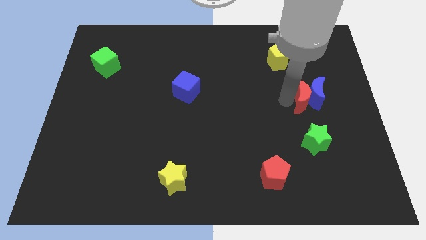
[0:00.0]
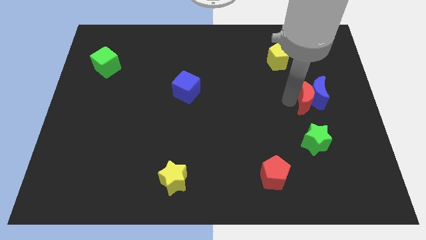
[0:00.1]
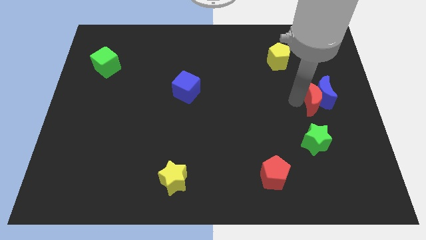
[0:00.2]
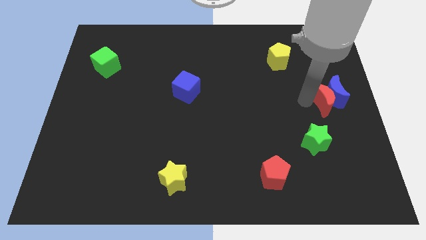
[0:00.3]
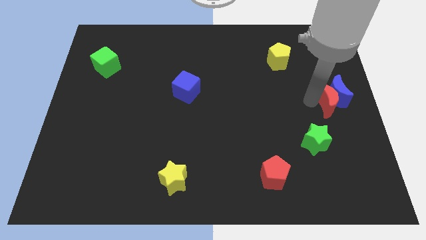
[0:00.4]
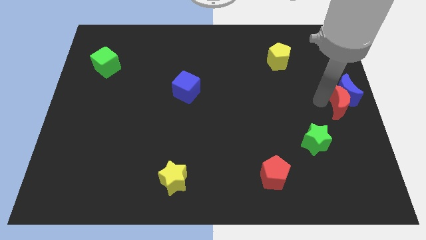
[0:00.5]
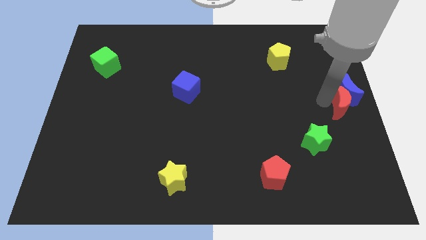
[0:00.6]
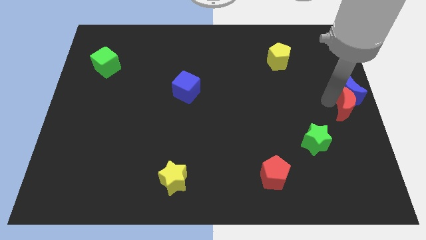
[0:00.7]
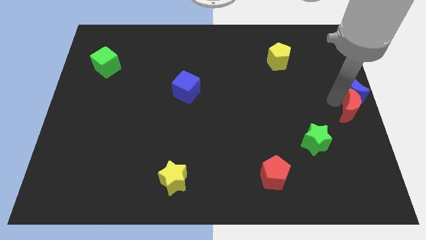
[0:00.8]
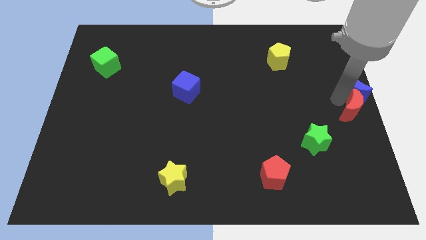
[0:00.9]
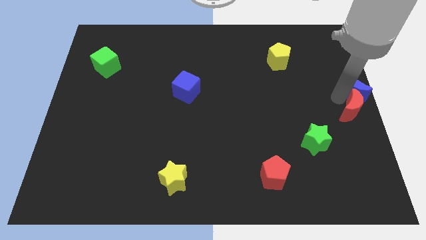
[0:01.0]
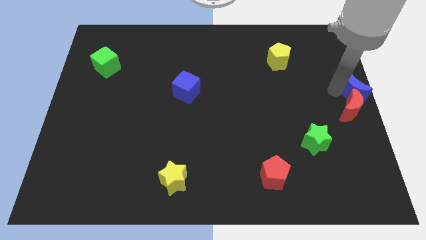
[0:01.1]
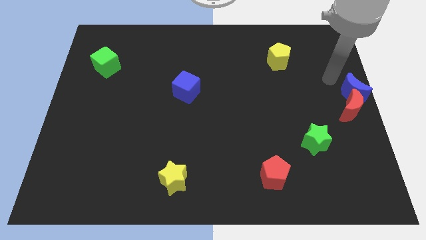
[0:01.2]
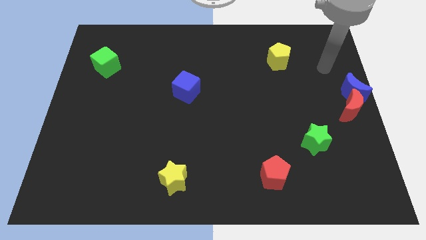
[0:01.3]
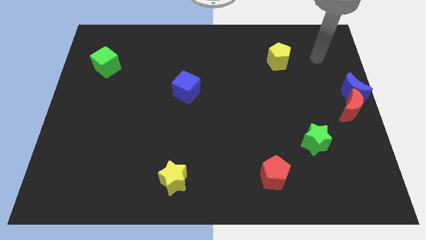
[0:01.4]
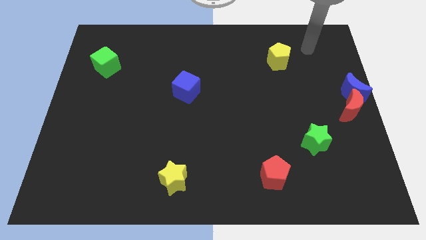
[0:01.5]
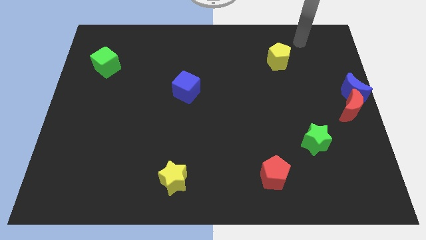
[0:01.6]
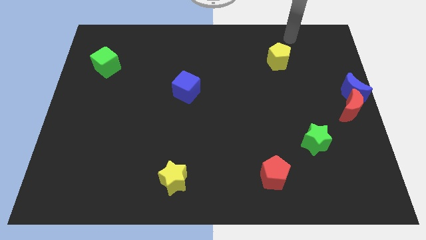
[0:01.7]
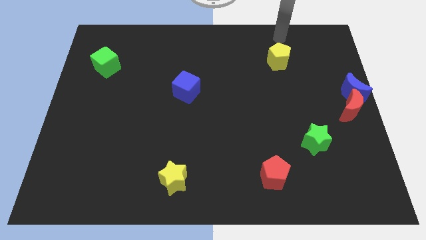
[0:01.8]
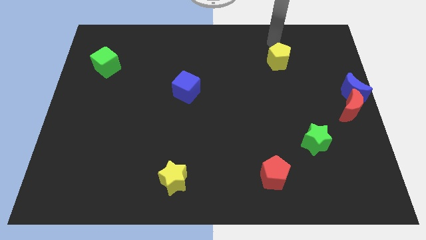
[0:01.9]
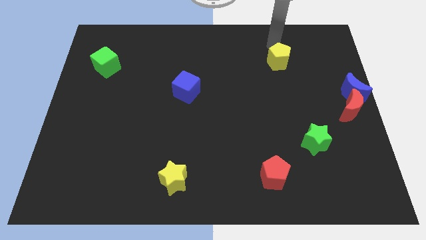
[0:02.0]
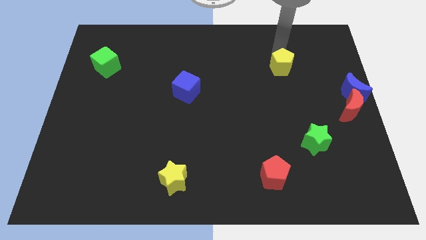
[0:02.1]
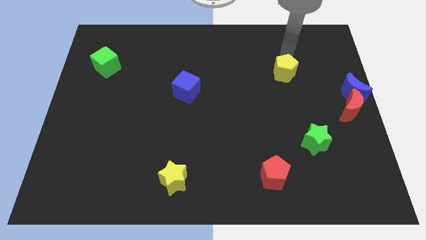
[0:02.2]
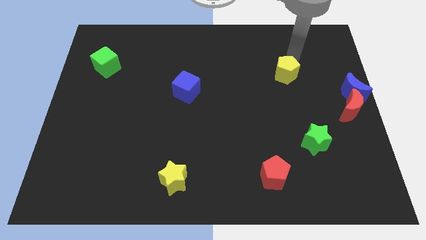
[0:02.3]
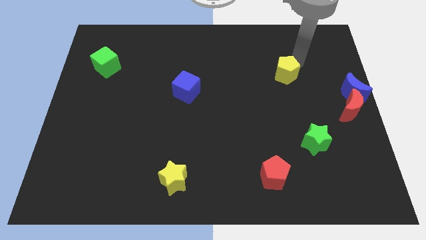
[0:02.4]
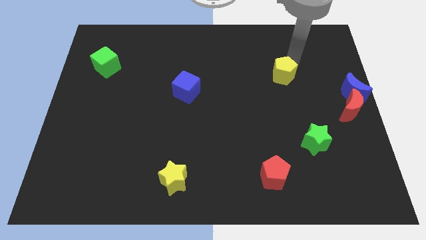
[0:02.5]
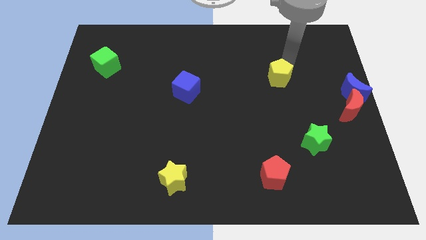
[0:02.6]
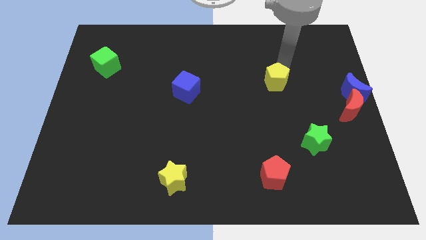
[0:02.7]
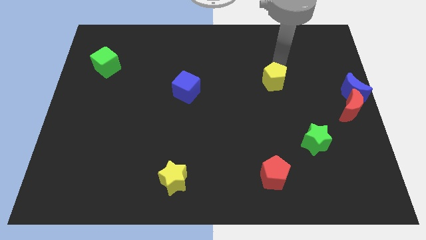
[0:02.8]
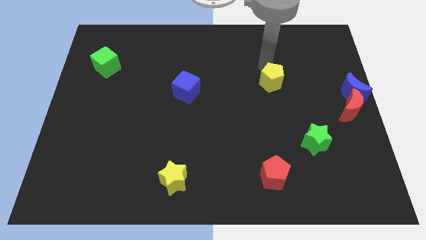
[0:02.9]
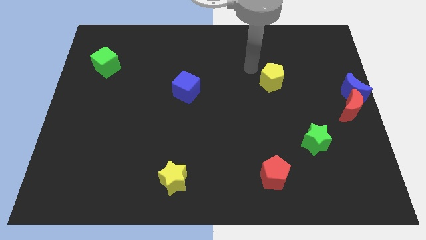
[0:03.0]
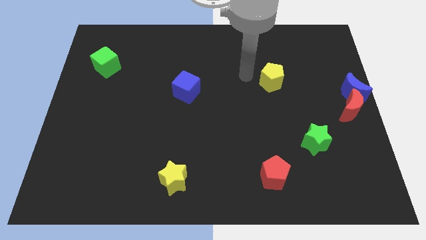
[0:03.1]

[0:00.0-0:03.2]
push the red crescent and blue crescent towards the center right of the board

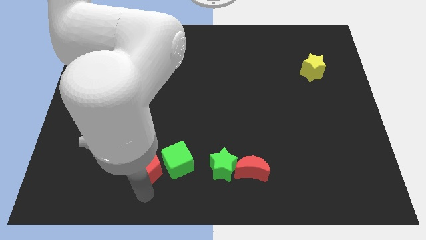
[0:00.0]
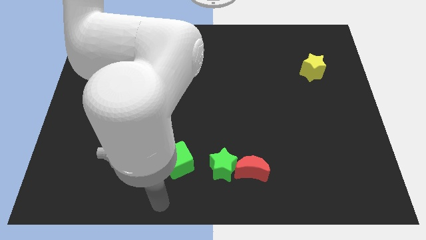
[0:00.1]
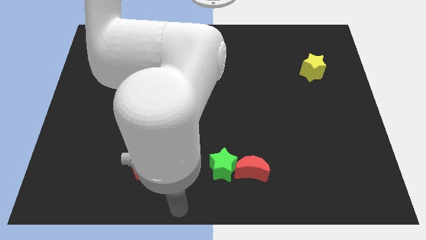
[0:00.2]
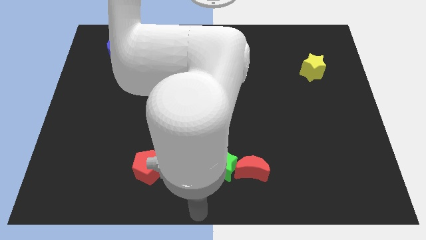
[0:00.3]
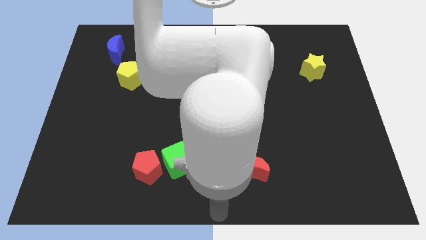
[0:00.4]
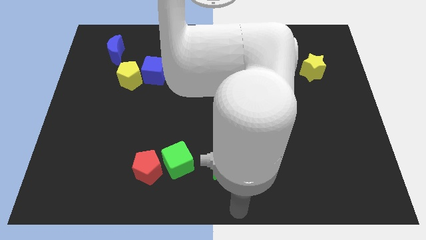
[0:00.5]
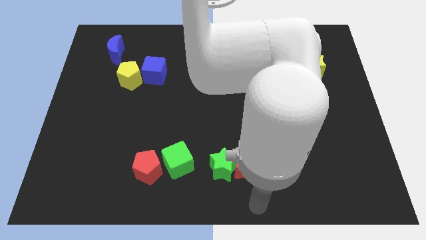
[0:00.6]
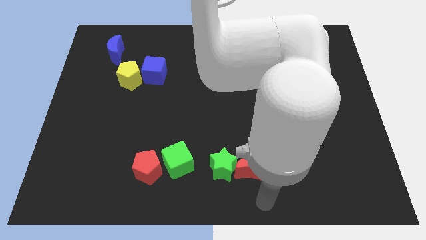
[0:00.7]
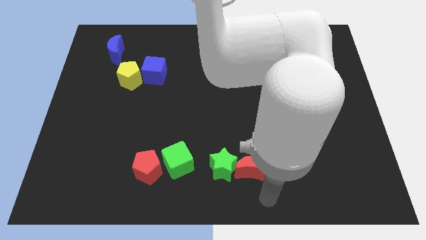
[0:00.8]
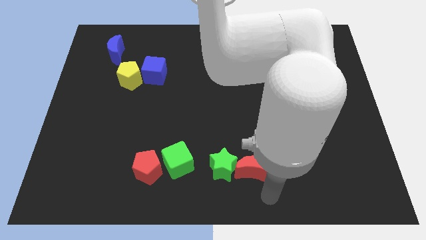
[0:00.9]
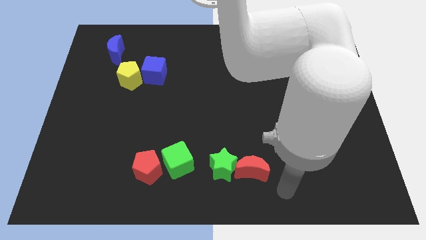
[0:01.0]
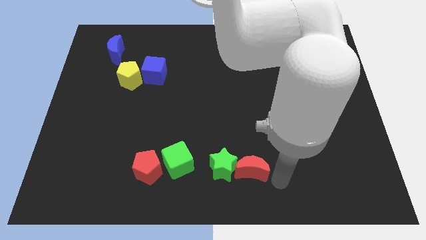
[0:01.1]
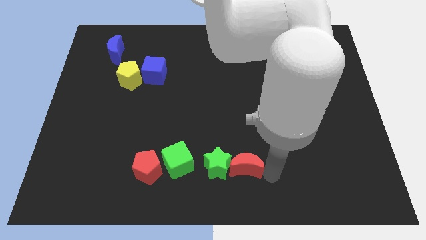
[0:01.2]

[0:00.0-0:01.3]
move your arm to the right of the red crescent

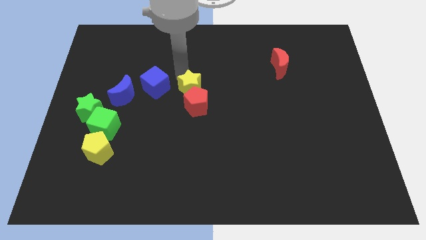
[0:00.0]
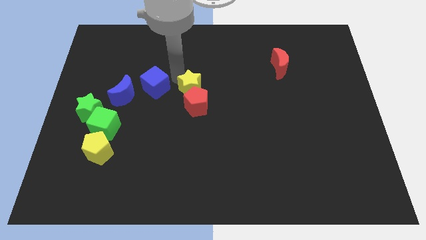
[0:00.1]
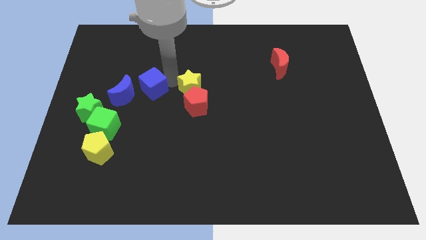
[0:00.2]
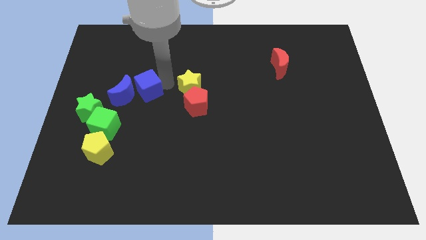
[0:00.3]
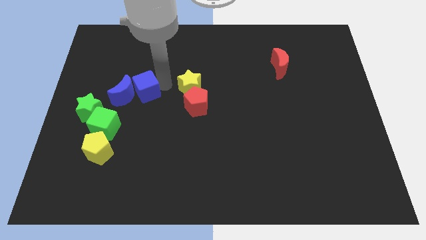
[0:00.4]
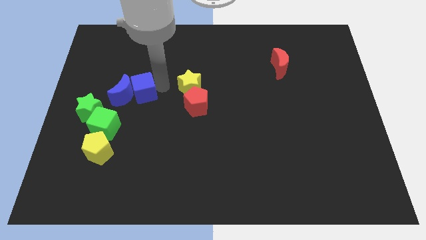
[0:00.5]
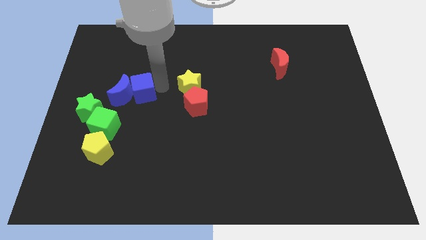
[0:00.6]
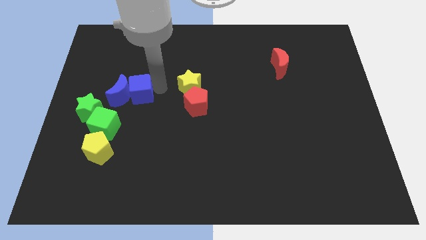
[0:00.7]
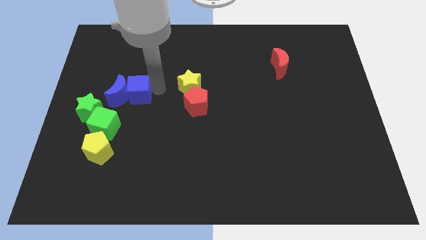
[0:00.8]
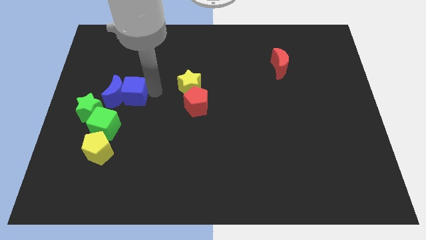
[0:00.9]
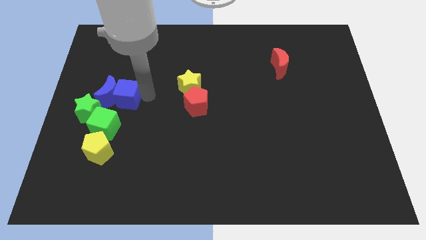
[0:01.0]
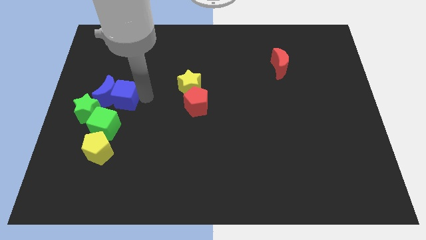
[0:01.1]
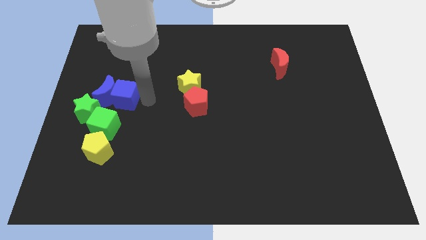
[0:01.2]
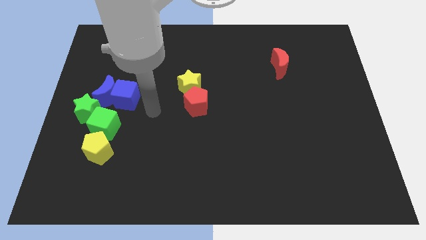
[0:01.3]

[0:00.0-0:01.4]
move blue cube into blue moon

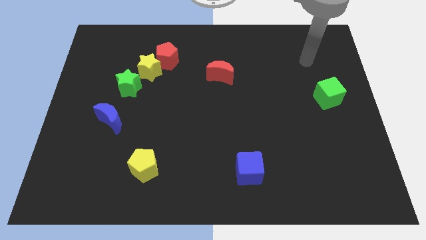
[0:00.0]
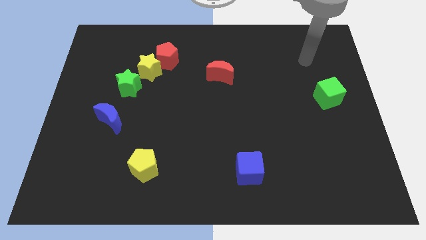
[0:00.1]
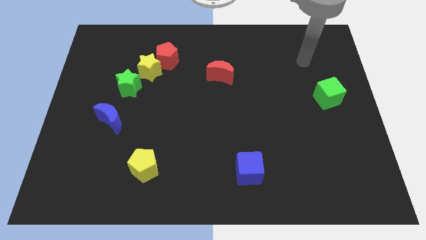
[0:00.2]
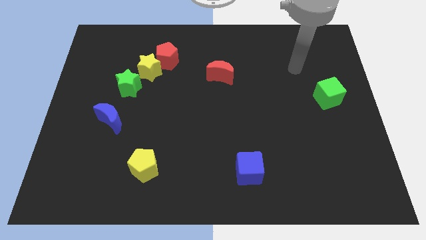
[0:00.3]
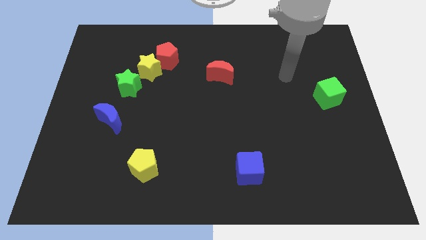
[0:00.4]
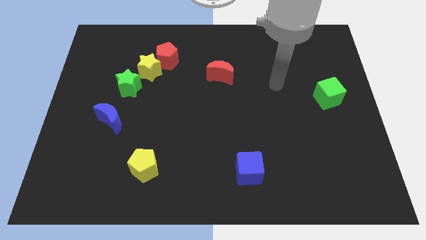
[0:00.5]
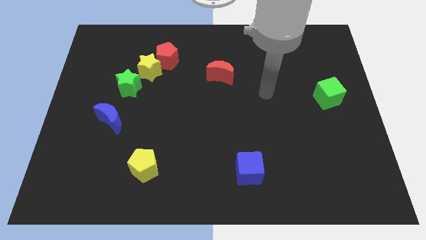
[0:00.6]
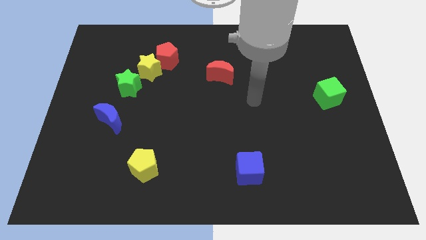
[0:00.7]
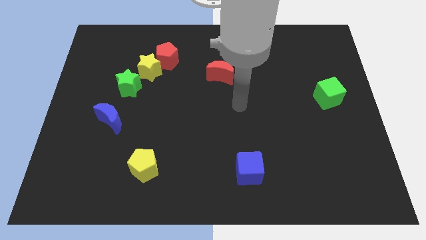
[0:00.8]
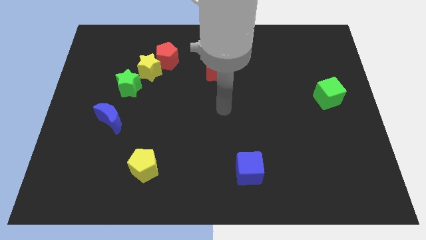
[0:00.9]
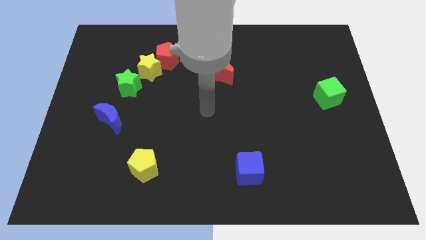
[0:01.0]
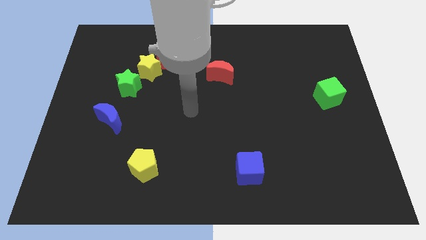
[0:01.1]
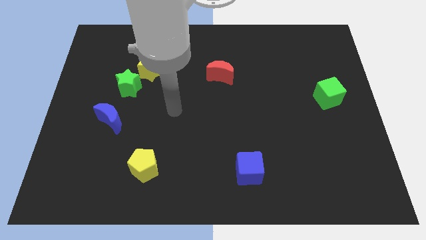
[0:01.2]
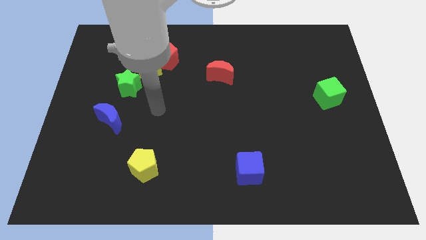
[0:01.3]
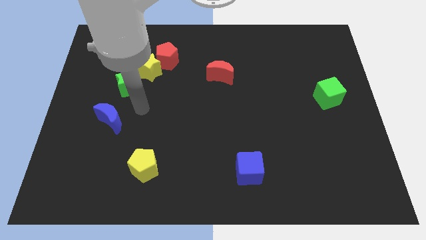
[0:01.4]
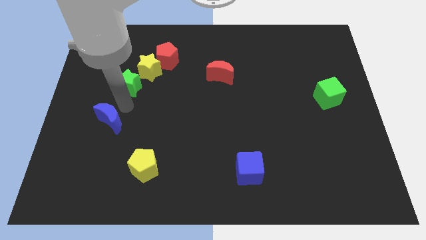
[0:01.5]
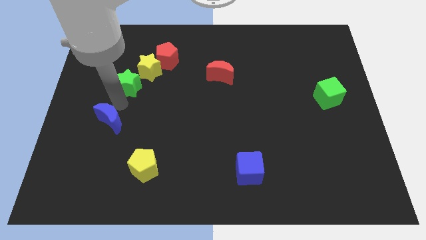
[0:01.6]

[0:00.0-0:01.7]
move your arm to the bottom of the green star

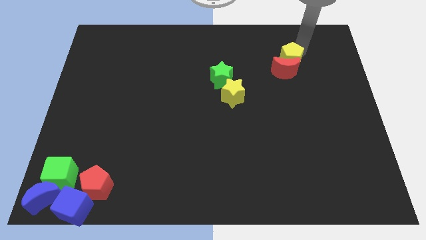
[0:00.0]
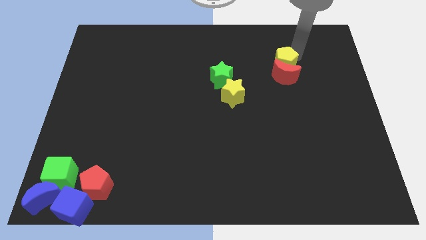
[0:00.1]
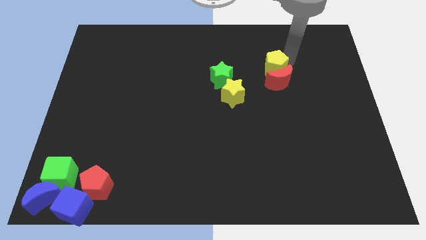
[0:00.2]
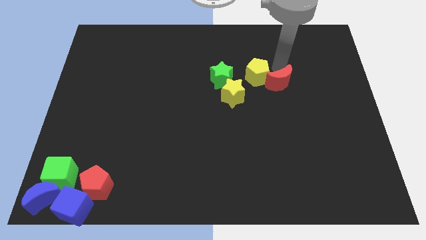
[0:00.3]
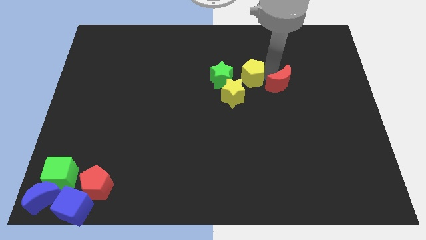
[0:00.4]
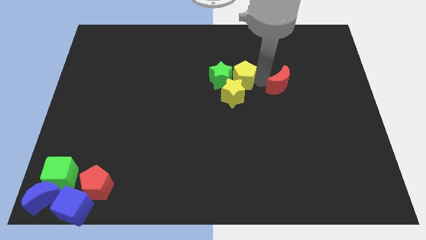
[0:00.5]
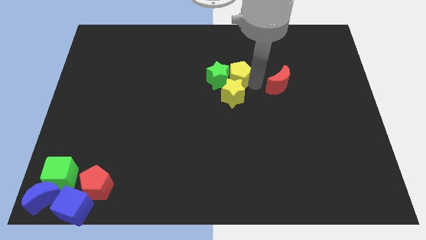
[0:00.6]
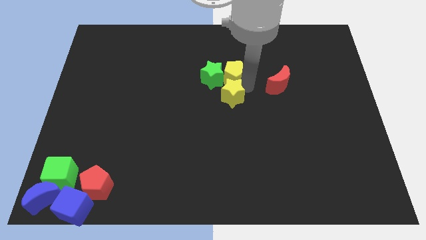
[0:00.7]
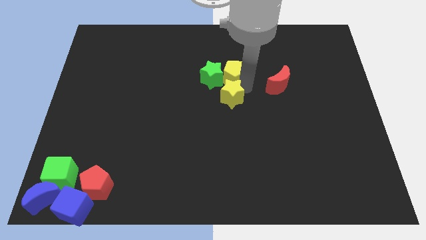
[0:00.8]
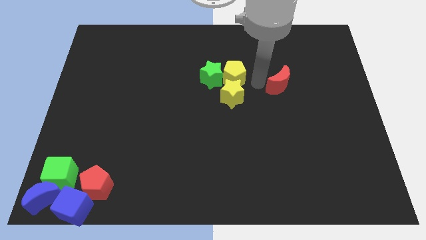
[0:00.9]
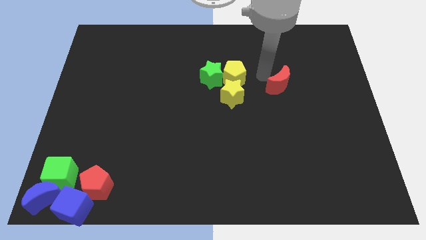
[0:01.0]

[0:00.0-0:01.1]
separate yellow pentagon and red moon

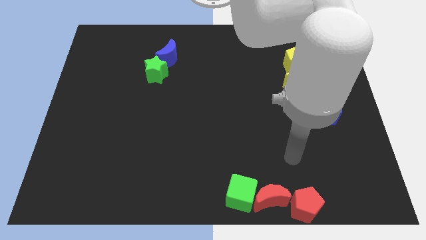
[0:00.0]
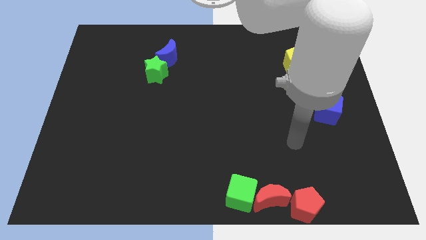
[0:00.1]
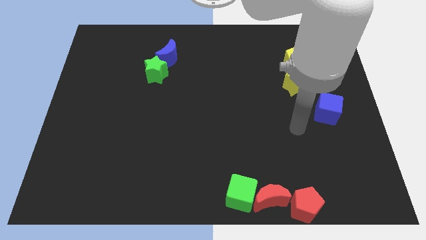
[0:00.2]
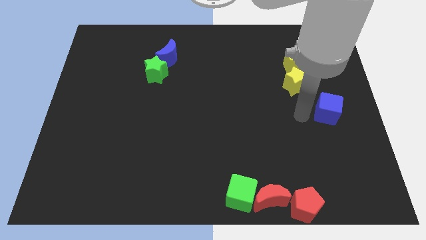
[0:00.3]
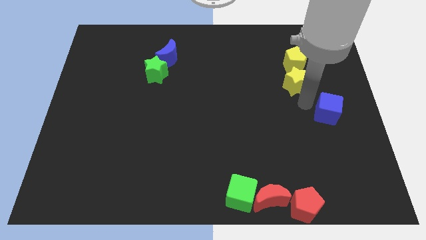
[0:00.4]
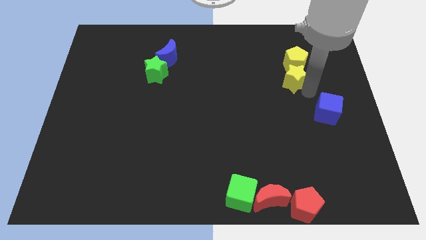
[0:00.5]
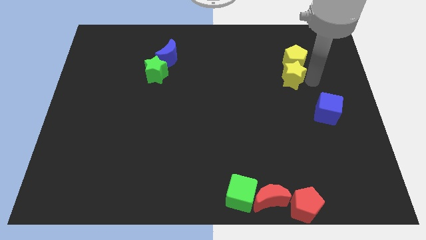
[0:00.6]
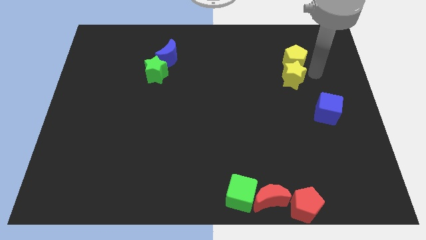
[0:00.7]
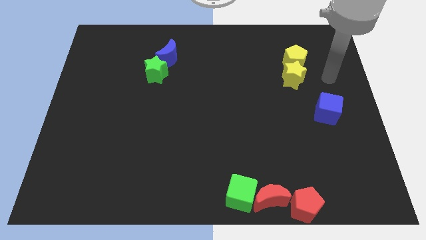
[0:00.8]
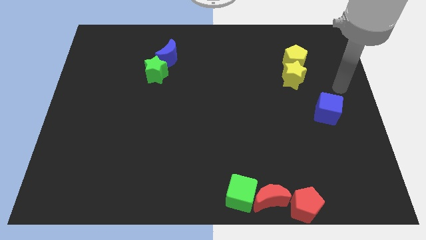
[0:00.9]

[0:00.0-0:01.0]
push the yellow star into the yellow pentagon
